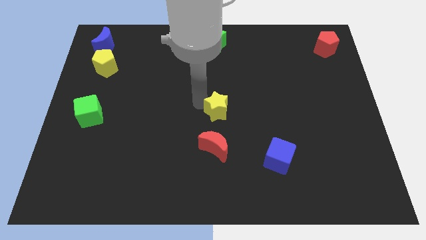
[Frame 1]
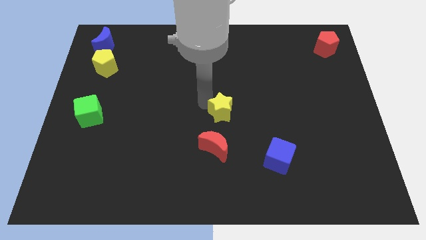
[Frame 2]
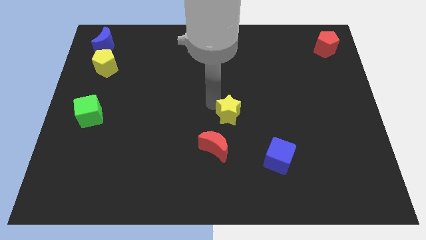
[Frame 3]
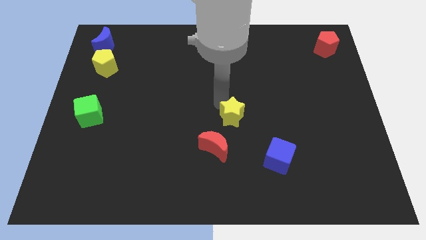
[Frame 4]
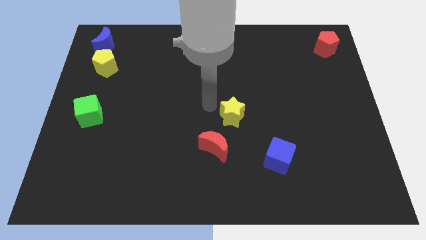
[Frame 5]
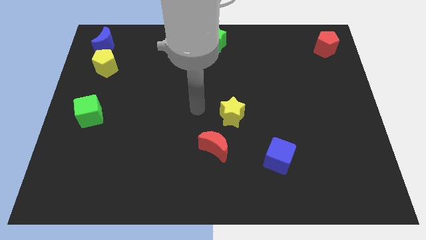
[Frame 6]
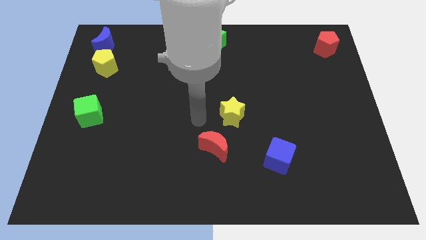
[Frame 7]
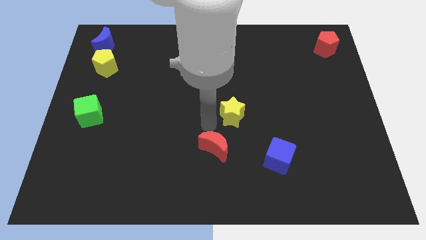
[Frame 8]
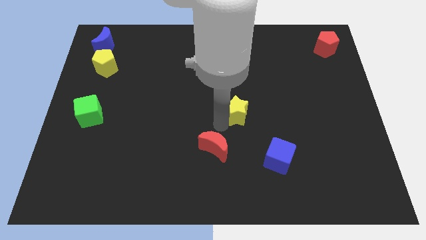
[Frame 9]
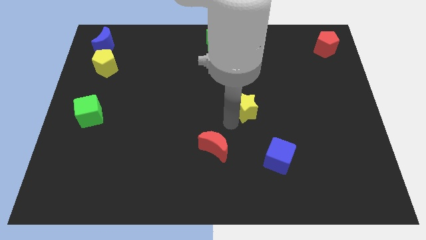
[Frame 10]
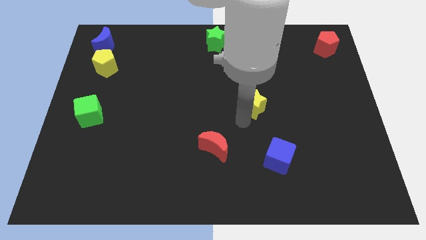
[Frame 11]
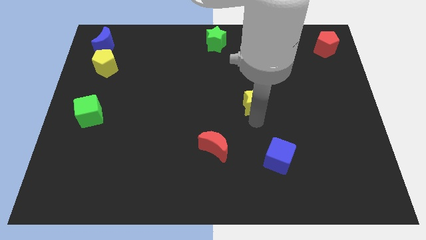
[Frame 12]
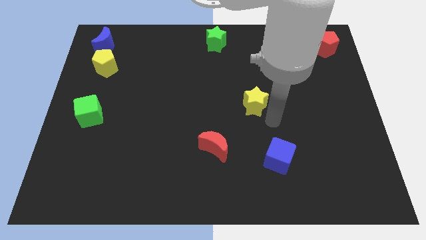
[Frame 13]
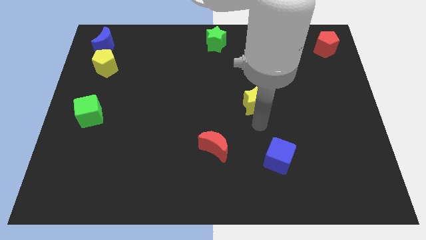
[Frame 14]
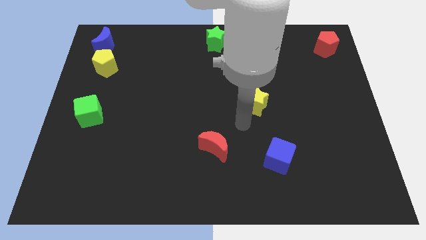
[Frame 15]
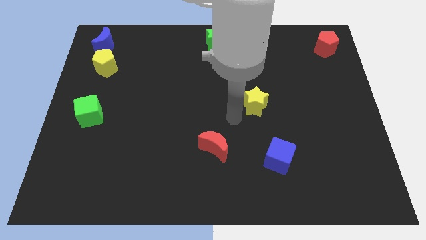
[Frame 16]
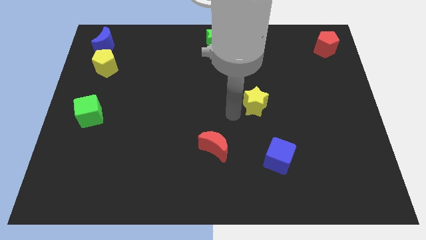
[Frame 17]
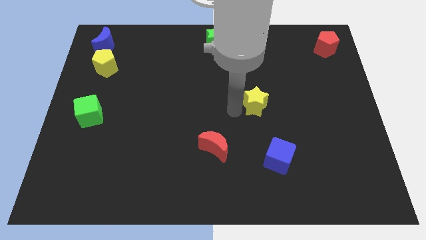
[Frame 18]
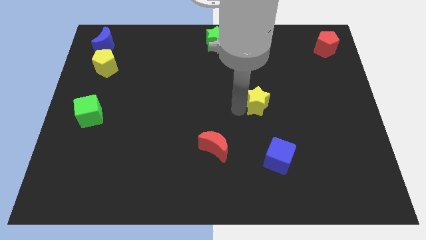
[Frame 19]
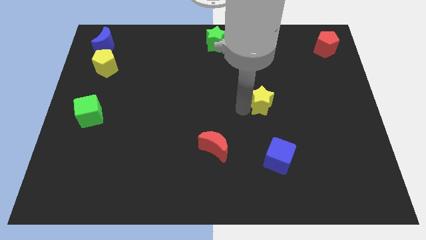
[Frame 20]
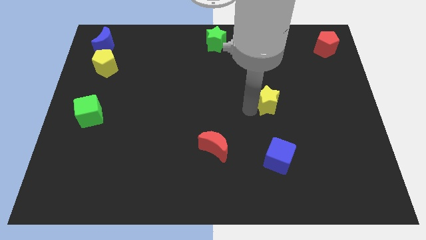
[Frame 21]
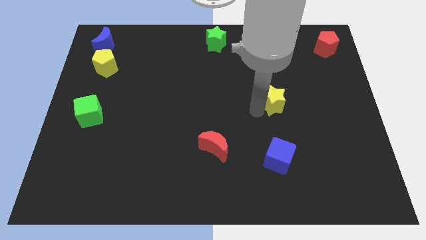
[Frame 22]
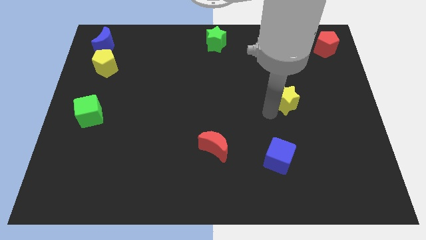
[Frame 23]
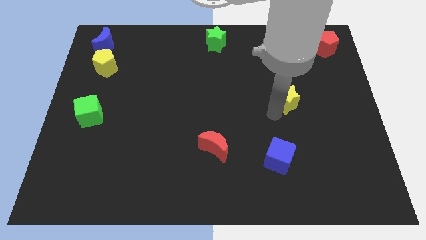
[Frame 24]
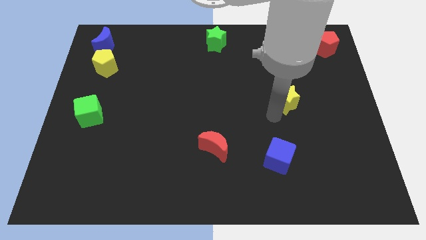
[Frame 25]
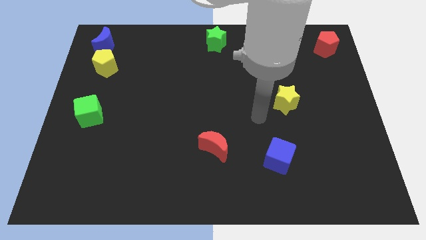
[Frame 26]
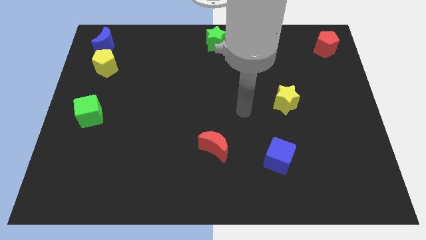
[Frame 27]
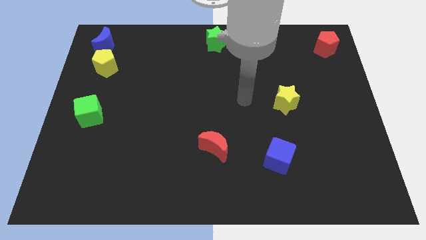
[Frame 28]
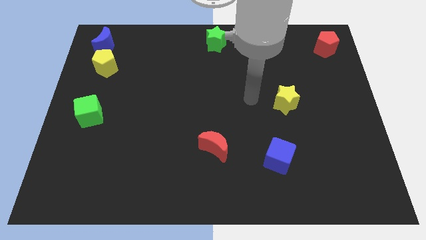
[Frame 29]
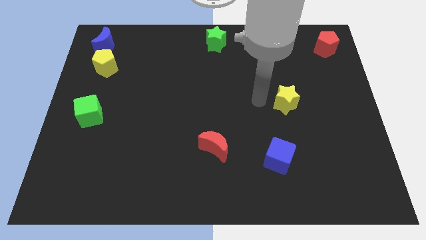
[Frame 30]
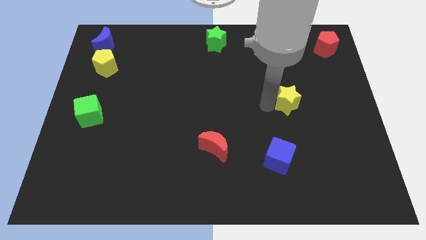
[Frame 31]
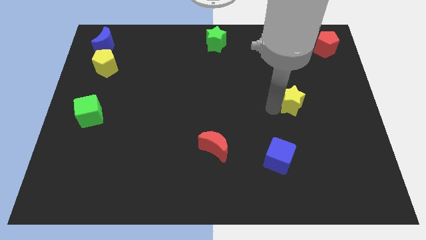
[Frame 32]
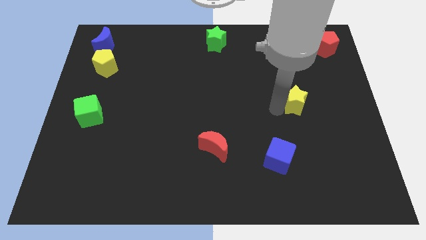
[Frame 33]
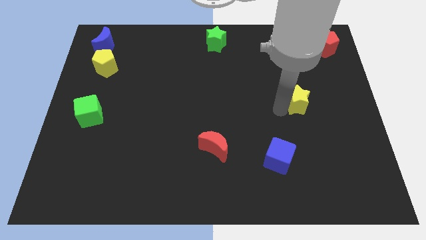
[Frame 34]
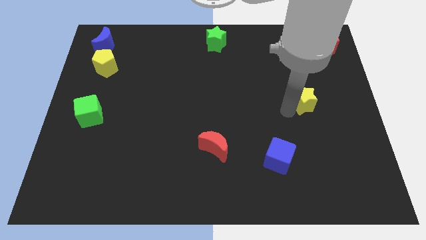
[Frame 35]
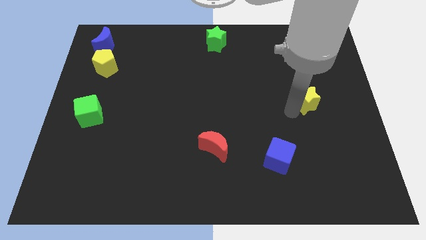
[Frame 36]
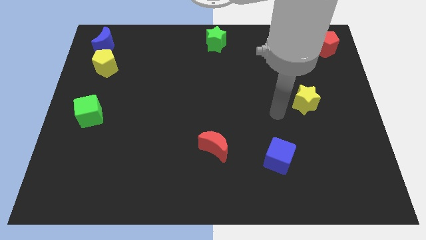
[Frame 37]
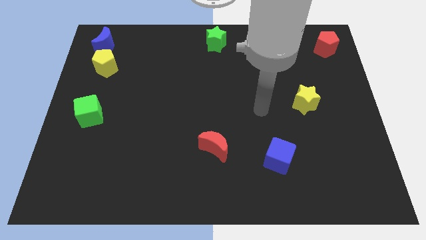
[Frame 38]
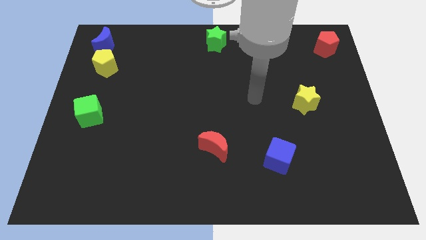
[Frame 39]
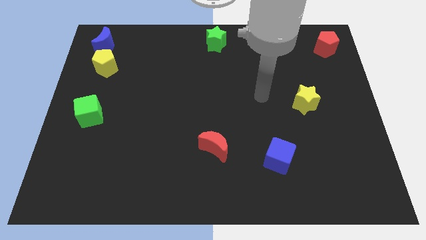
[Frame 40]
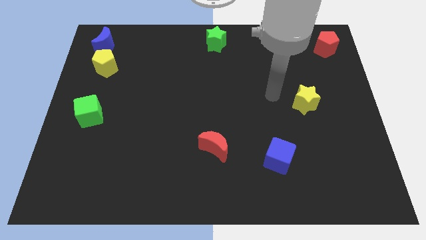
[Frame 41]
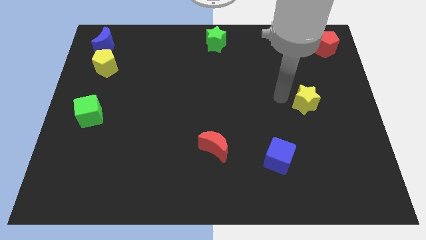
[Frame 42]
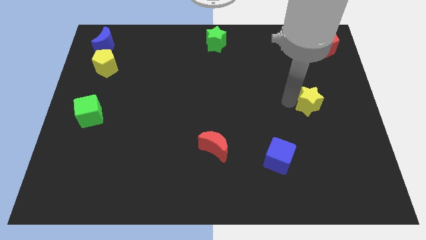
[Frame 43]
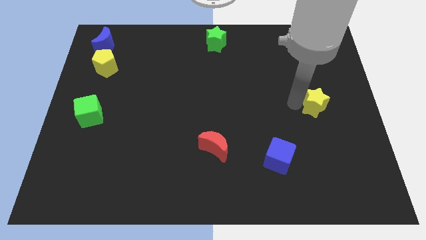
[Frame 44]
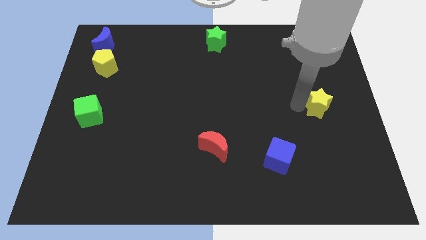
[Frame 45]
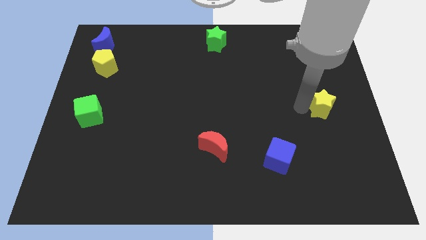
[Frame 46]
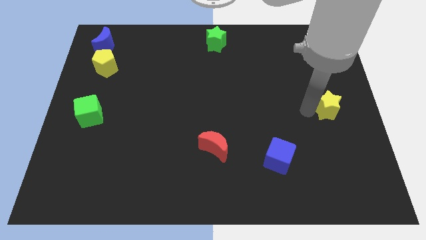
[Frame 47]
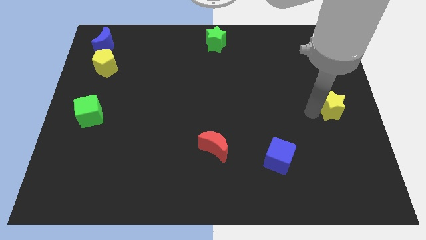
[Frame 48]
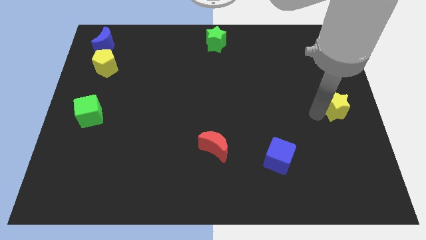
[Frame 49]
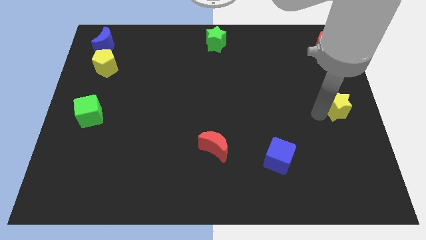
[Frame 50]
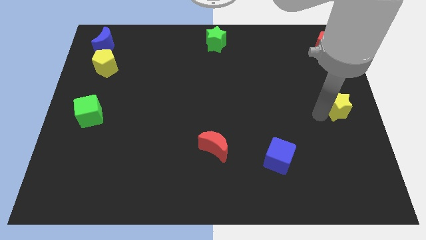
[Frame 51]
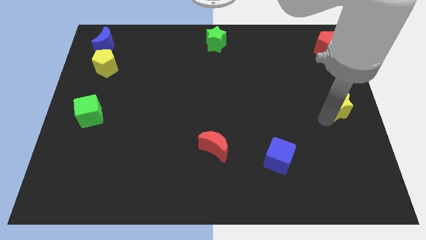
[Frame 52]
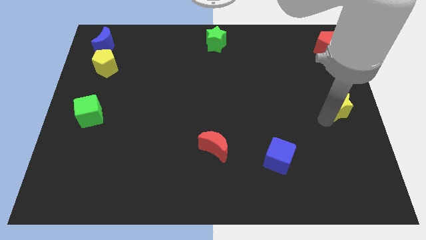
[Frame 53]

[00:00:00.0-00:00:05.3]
place yellow star vertical to red pentagon

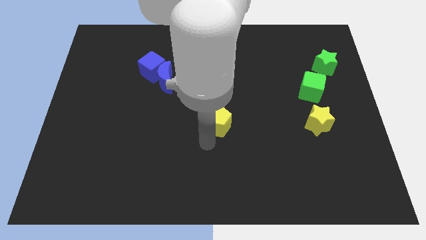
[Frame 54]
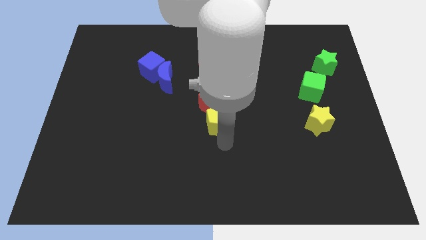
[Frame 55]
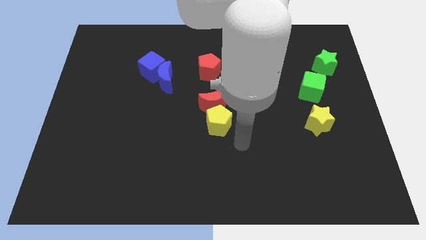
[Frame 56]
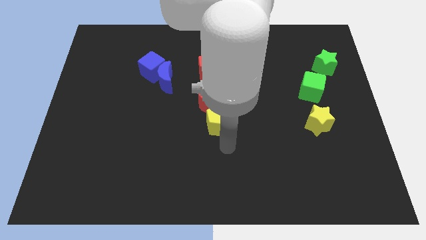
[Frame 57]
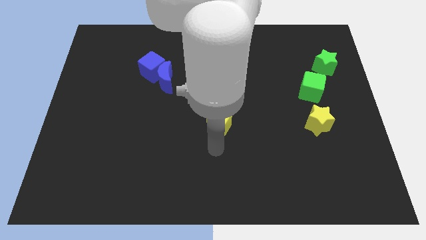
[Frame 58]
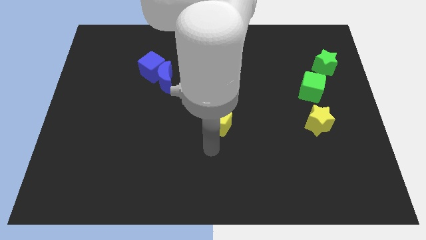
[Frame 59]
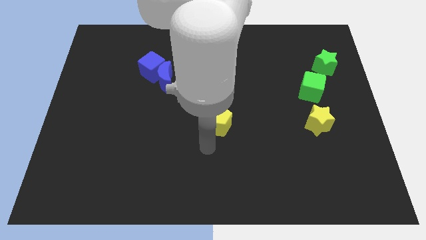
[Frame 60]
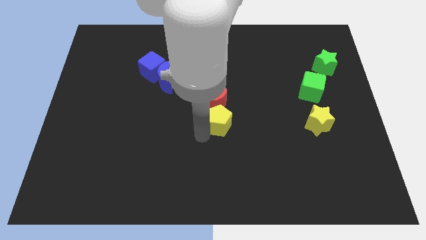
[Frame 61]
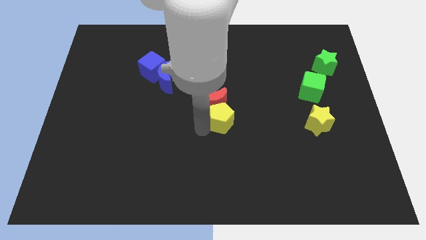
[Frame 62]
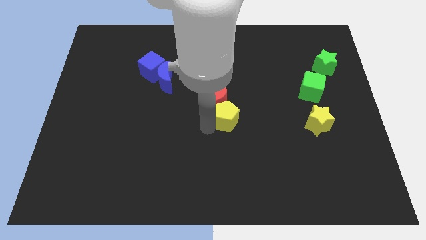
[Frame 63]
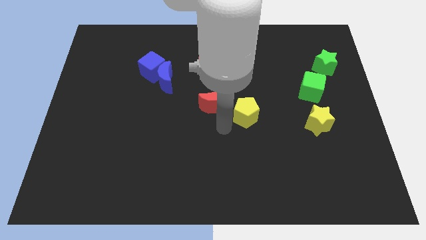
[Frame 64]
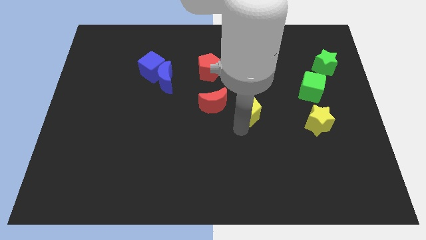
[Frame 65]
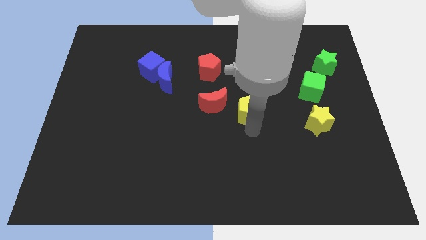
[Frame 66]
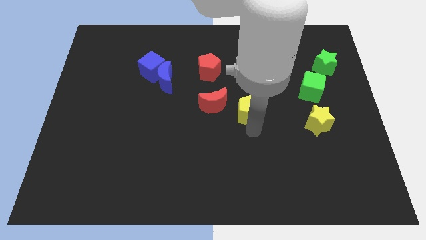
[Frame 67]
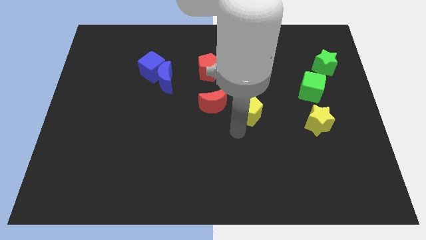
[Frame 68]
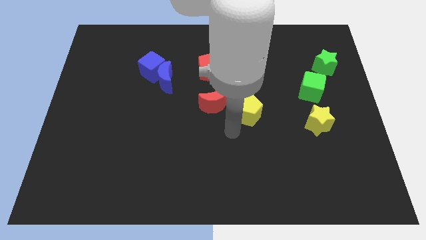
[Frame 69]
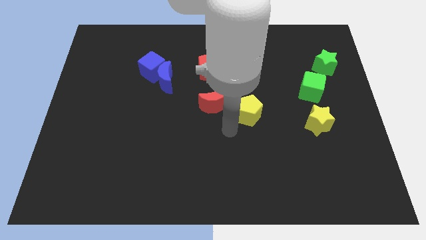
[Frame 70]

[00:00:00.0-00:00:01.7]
drag the yellow pentagon to the bottom right side of the red crescent

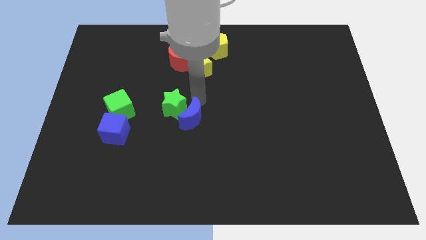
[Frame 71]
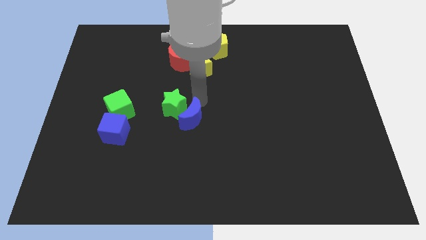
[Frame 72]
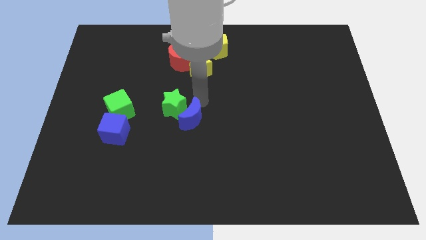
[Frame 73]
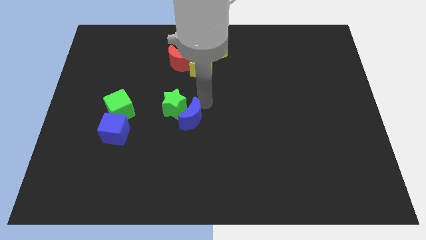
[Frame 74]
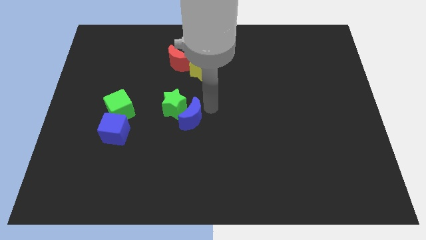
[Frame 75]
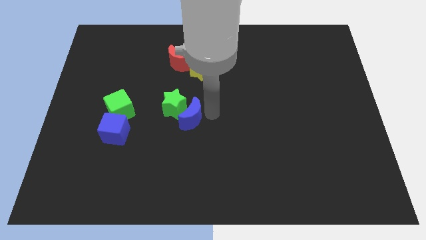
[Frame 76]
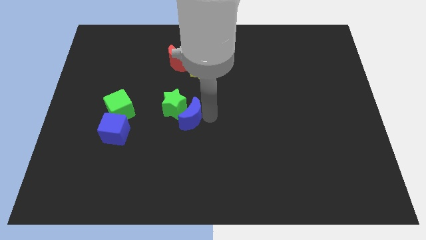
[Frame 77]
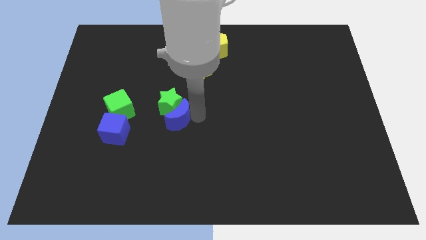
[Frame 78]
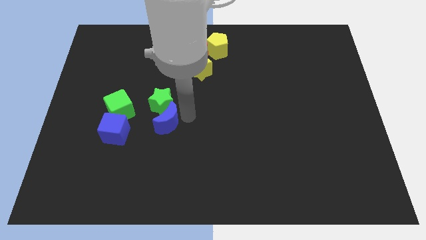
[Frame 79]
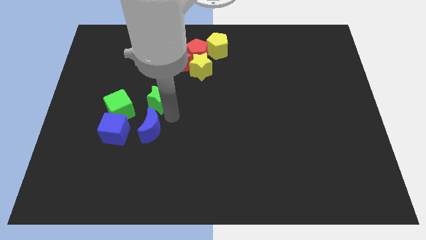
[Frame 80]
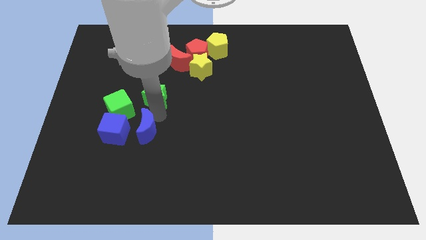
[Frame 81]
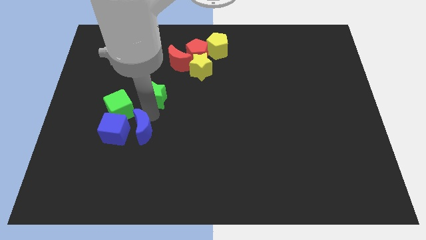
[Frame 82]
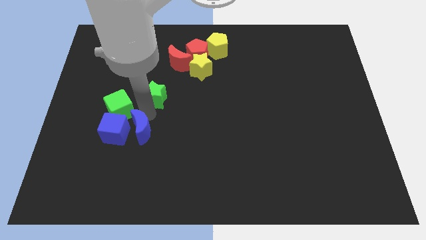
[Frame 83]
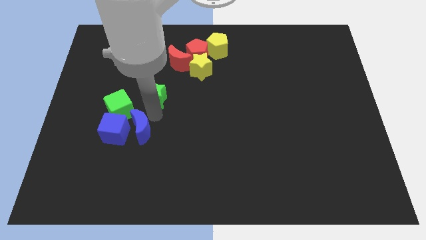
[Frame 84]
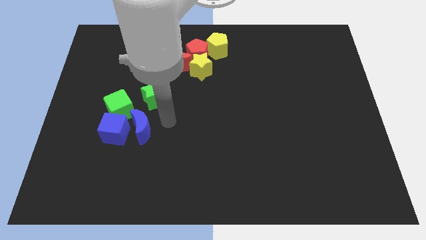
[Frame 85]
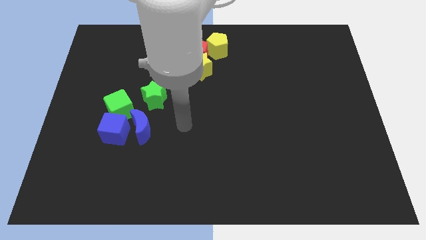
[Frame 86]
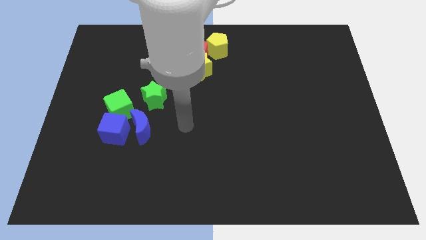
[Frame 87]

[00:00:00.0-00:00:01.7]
separate the blue moon towards right of blue cube

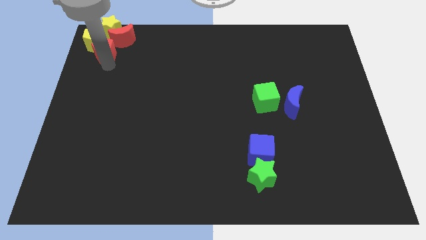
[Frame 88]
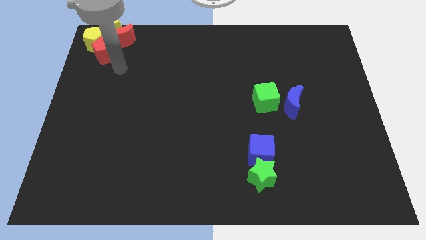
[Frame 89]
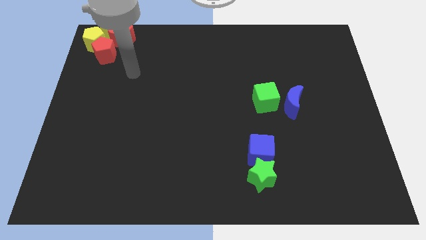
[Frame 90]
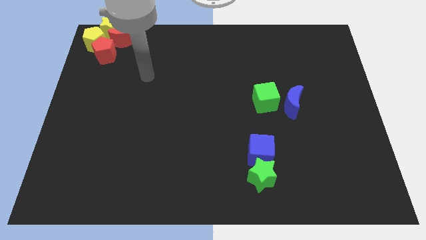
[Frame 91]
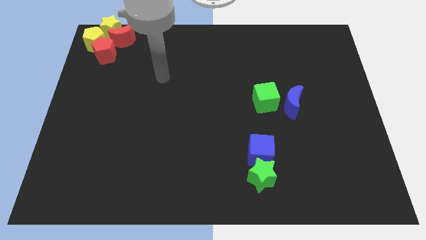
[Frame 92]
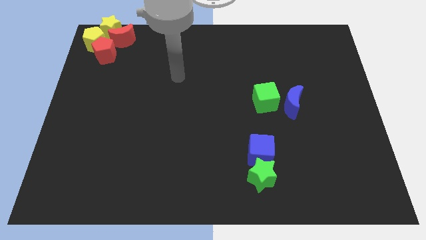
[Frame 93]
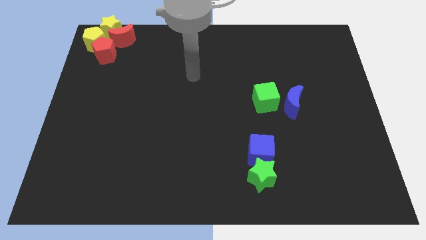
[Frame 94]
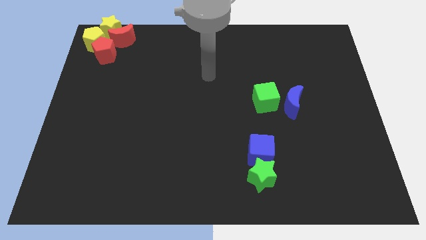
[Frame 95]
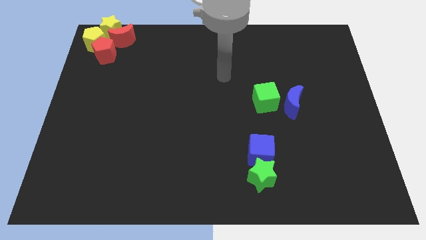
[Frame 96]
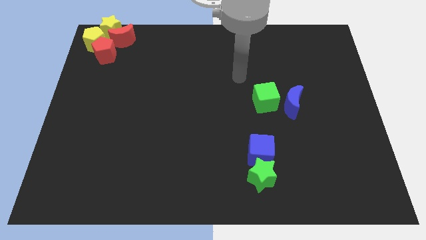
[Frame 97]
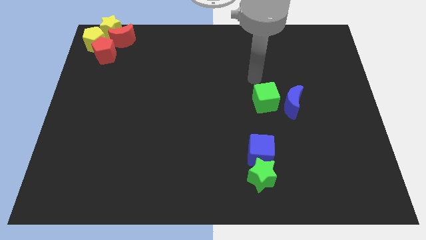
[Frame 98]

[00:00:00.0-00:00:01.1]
go away from the red pentagon
